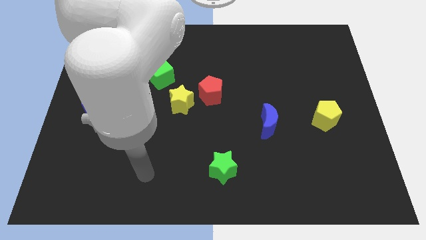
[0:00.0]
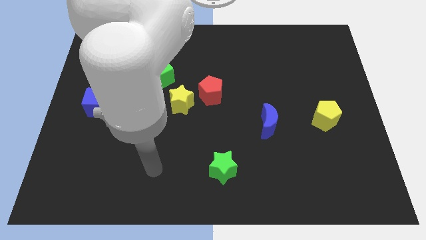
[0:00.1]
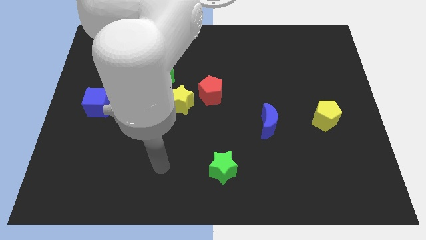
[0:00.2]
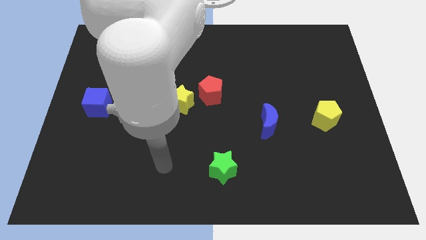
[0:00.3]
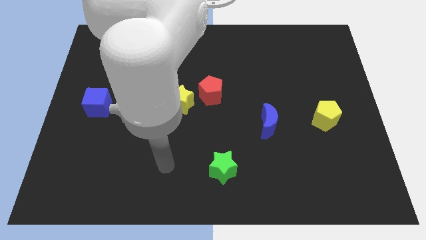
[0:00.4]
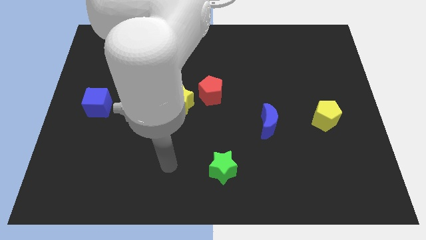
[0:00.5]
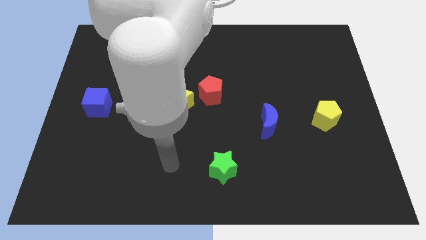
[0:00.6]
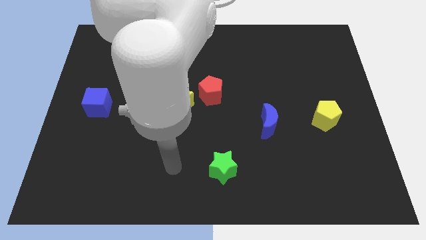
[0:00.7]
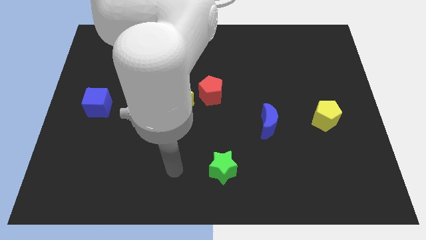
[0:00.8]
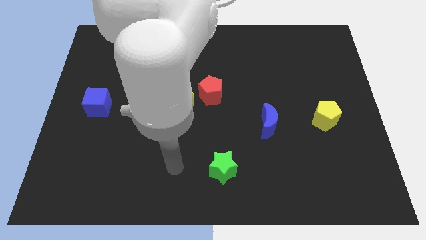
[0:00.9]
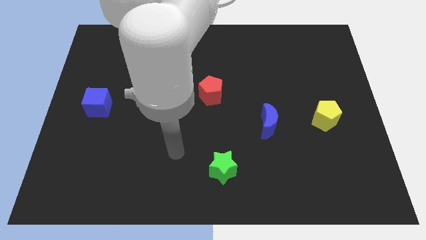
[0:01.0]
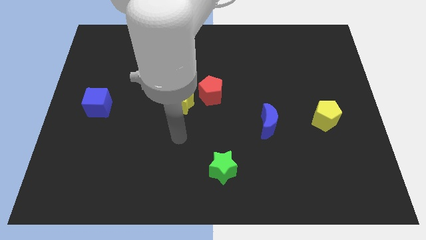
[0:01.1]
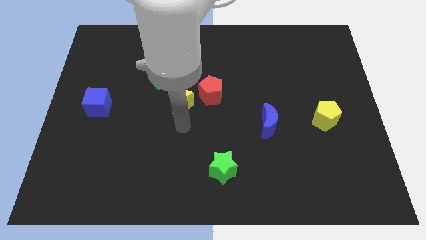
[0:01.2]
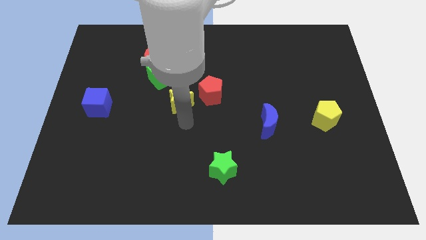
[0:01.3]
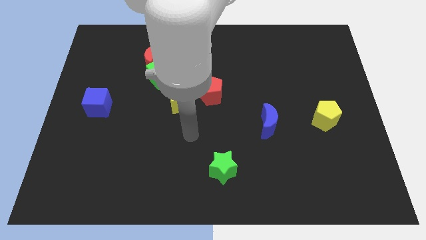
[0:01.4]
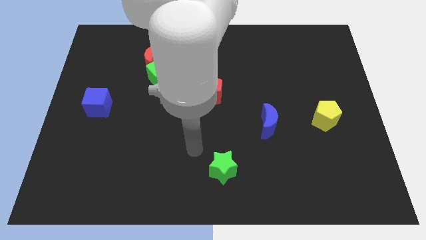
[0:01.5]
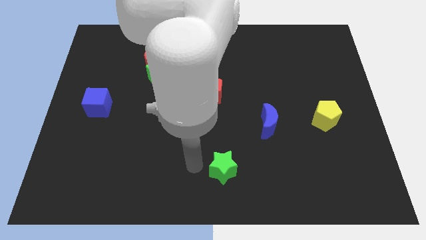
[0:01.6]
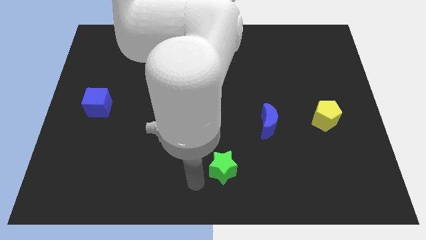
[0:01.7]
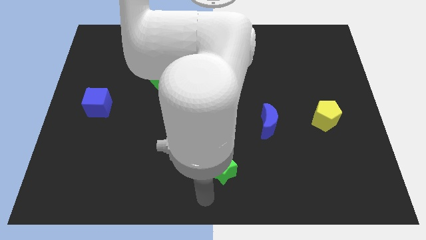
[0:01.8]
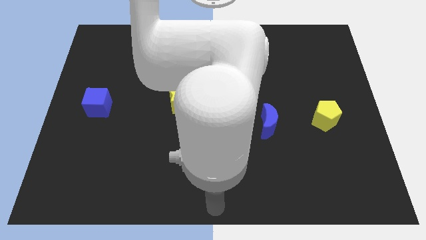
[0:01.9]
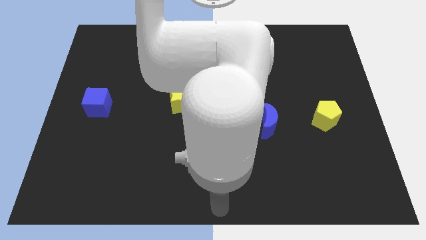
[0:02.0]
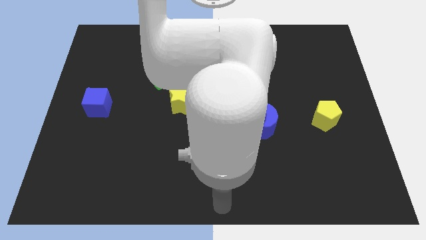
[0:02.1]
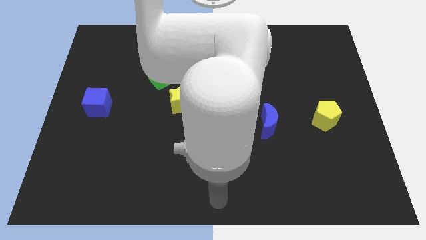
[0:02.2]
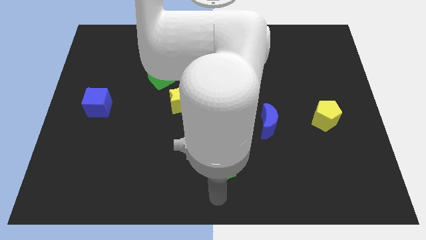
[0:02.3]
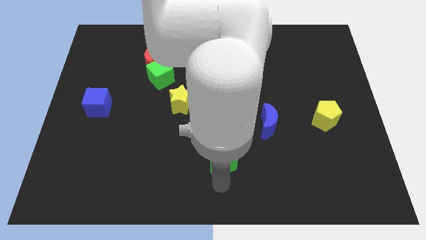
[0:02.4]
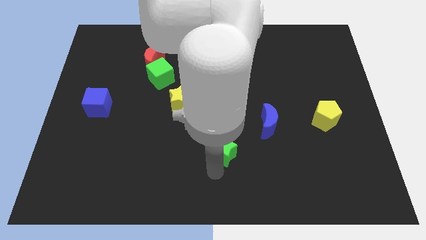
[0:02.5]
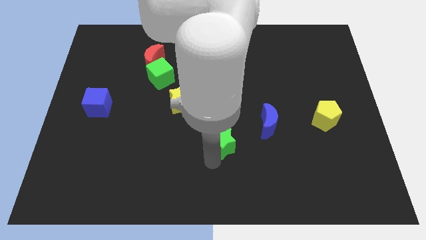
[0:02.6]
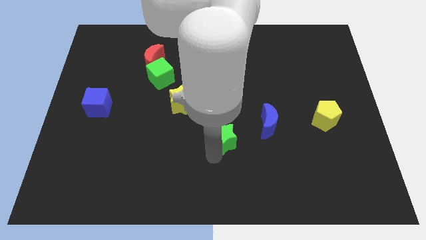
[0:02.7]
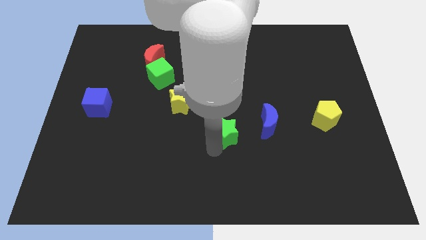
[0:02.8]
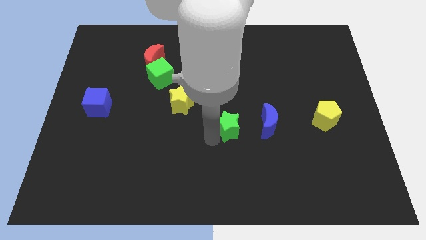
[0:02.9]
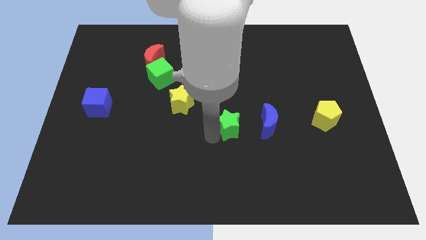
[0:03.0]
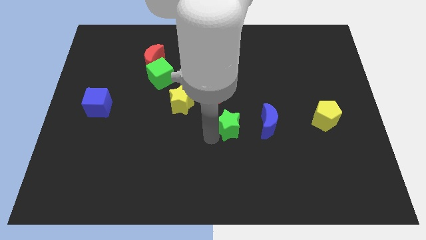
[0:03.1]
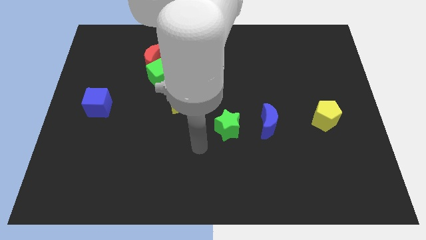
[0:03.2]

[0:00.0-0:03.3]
place green star parallel left to blue moon

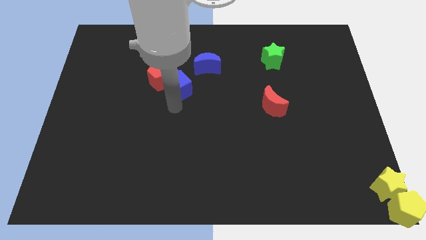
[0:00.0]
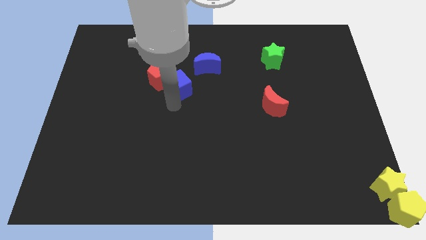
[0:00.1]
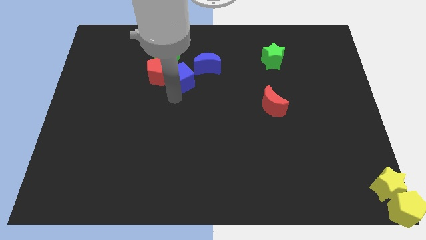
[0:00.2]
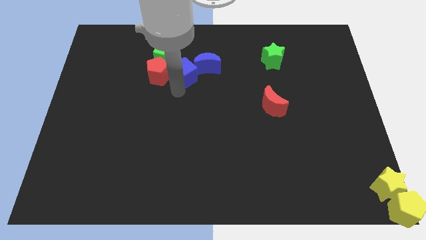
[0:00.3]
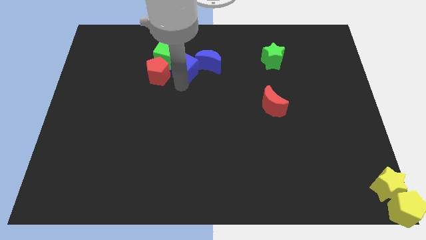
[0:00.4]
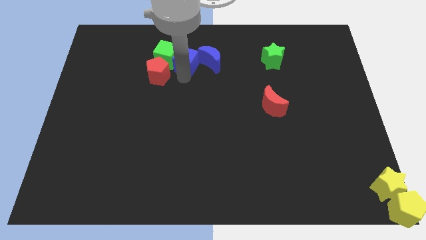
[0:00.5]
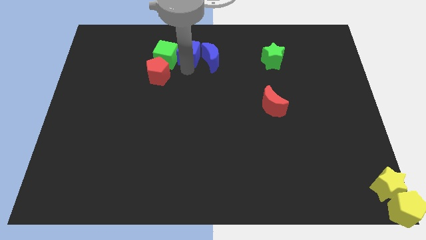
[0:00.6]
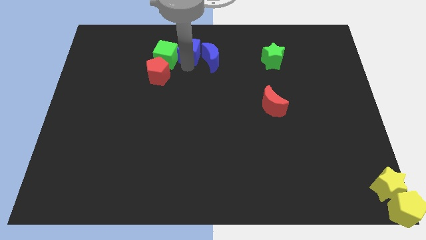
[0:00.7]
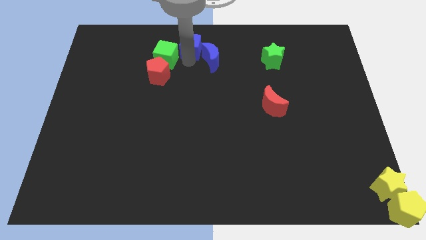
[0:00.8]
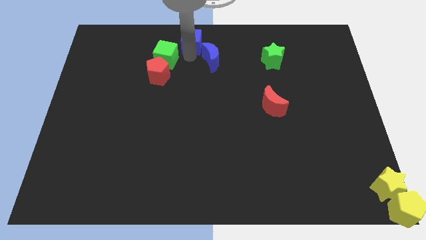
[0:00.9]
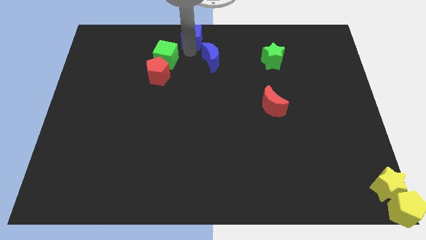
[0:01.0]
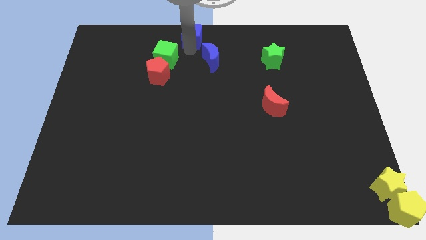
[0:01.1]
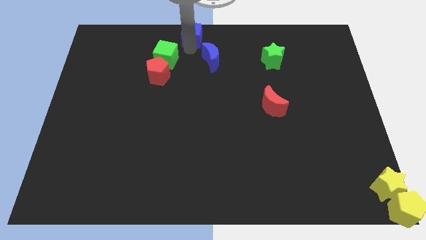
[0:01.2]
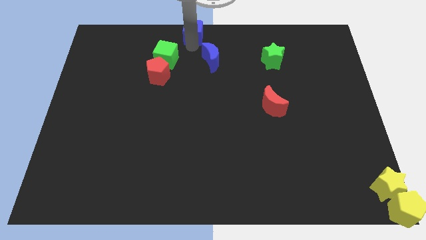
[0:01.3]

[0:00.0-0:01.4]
push the blue cube towards the top center of the board while separating the red pentagon and blue crescent

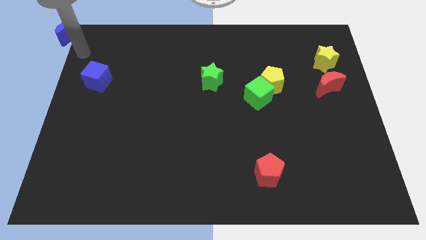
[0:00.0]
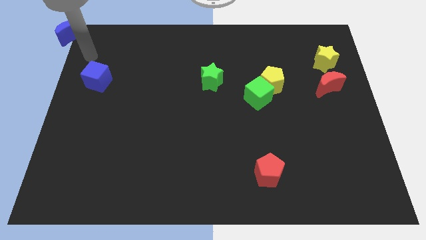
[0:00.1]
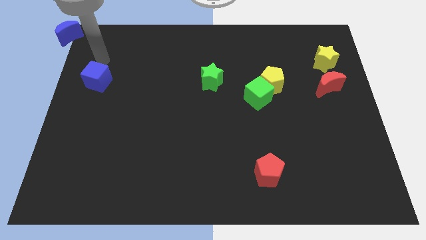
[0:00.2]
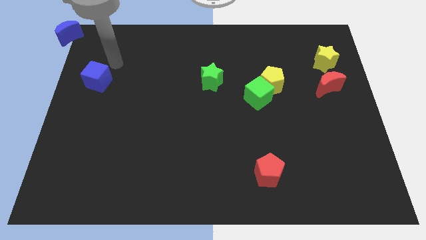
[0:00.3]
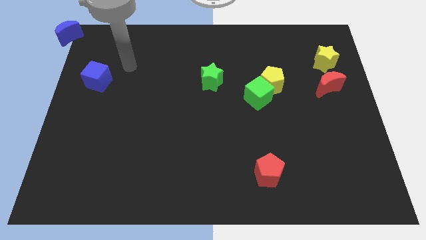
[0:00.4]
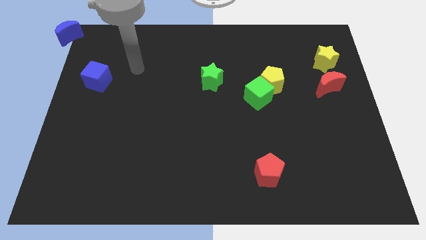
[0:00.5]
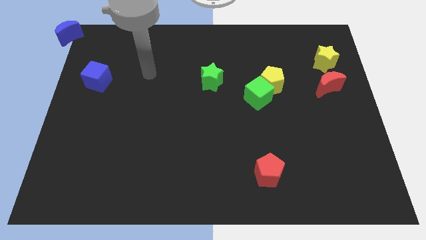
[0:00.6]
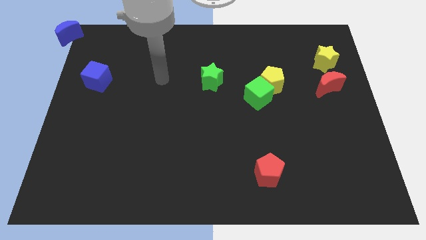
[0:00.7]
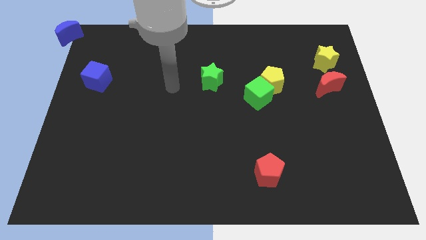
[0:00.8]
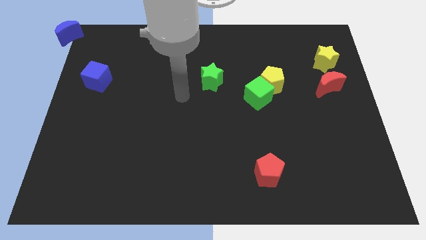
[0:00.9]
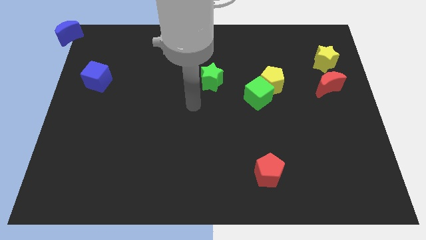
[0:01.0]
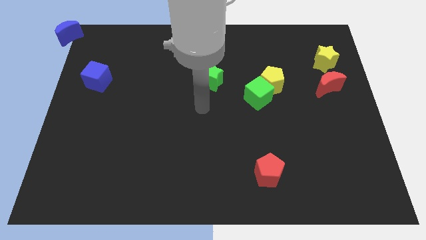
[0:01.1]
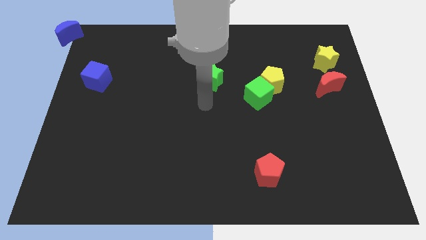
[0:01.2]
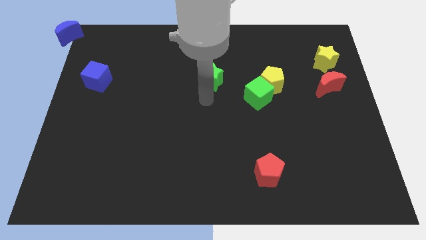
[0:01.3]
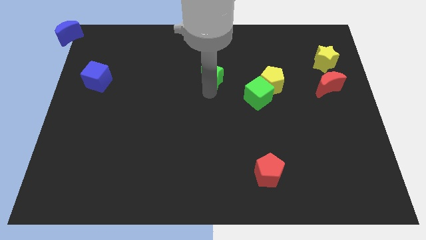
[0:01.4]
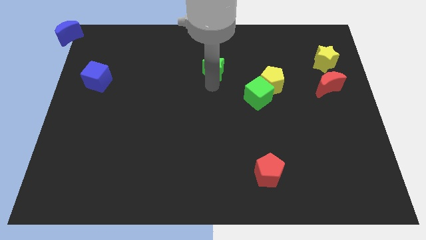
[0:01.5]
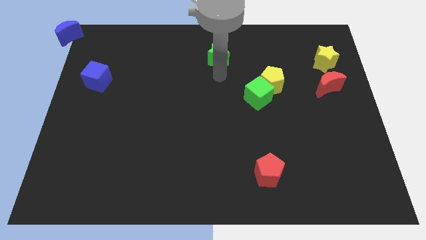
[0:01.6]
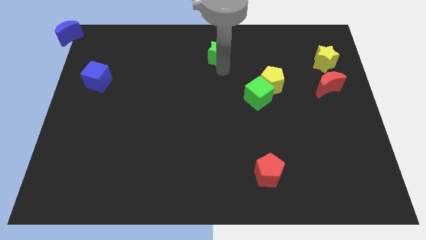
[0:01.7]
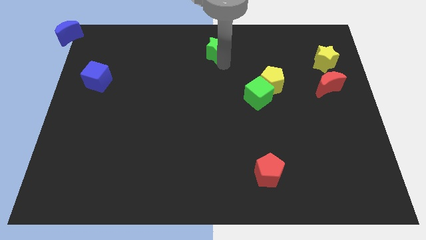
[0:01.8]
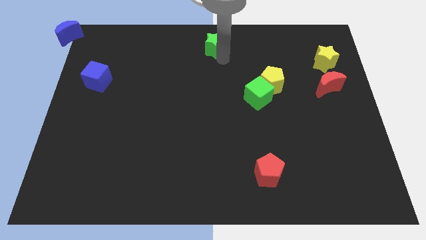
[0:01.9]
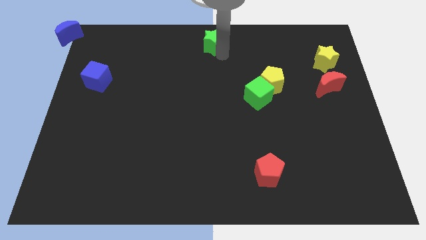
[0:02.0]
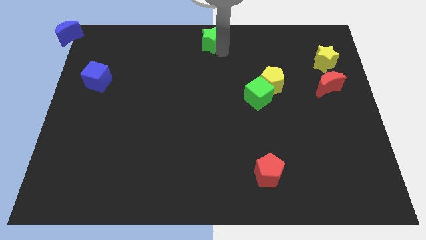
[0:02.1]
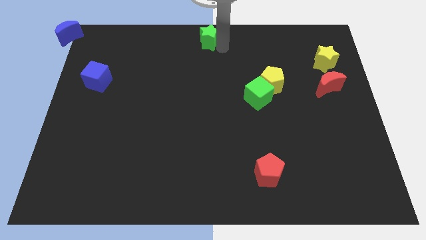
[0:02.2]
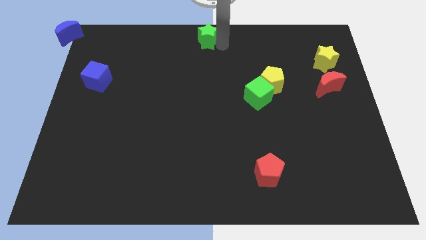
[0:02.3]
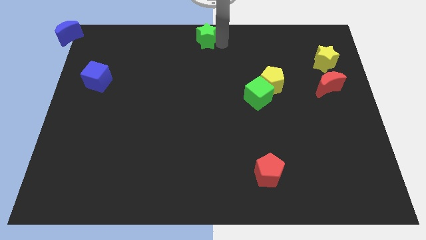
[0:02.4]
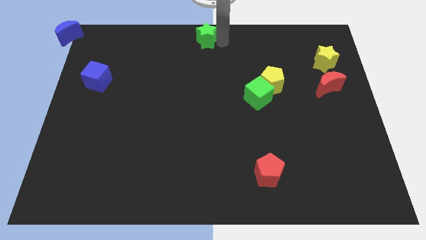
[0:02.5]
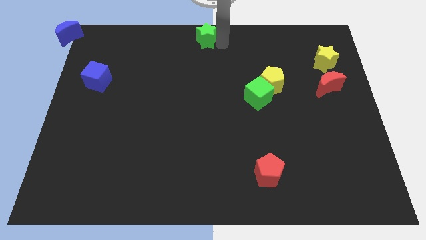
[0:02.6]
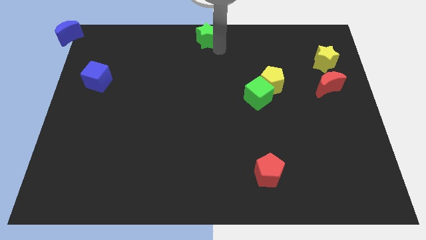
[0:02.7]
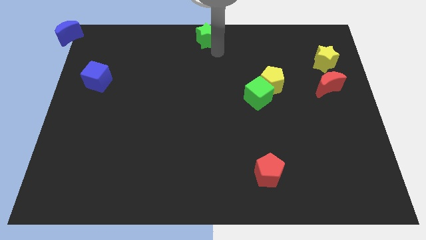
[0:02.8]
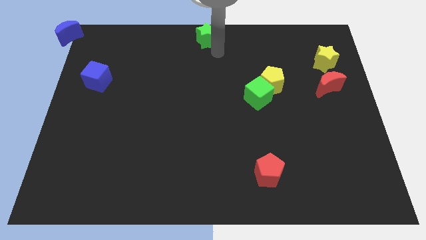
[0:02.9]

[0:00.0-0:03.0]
move the green star to the top center of the board

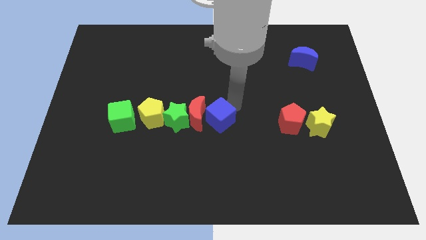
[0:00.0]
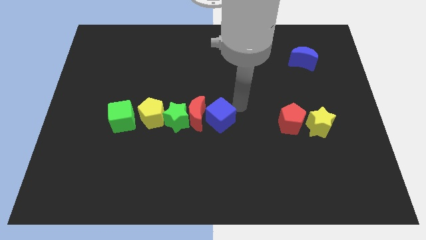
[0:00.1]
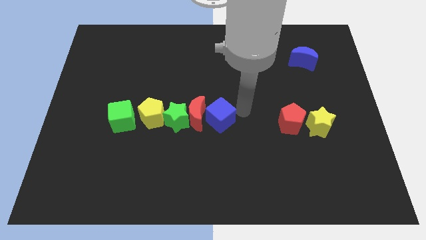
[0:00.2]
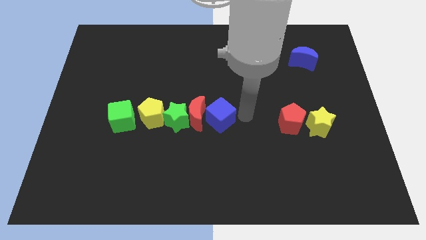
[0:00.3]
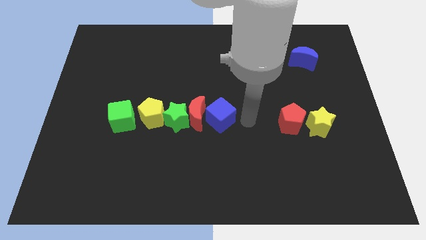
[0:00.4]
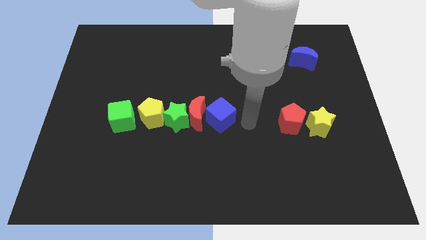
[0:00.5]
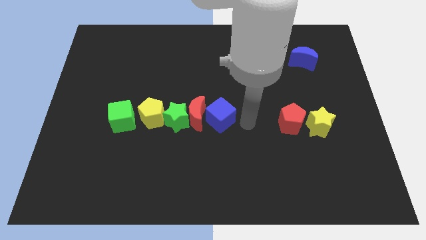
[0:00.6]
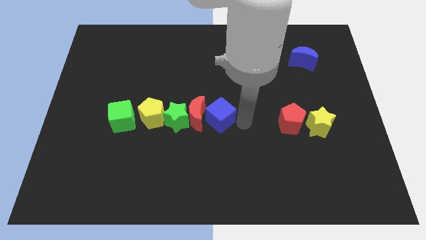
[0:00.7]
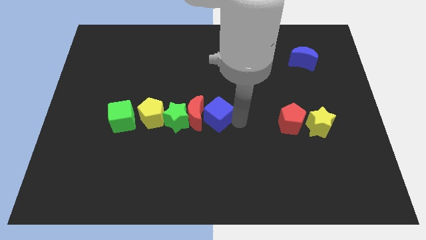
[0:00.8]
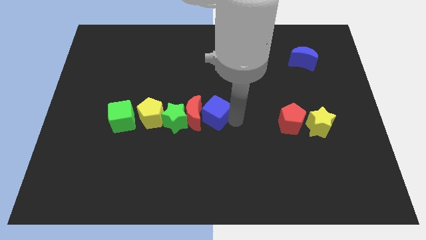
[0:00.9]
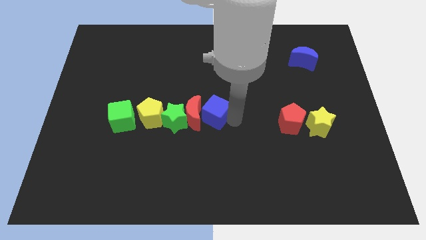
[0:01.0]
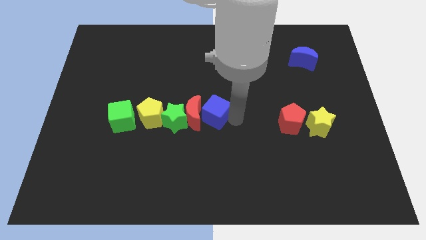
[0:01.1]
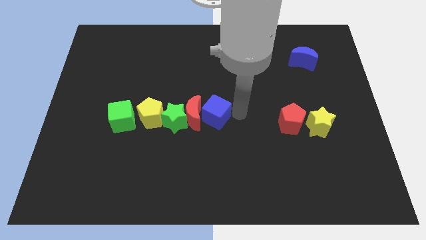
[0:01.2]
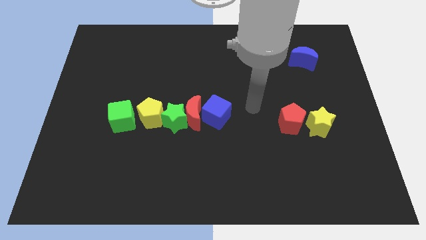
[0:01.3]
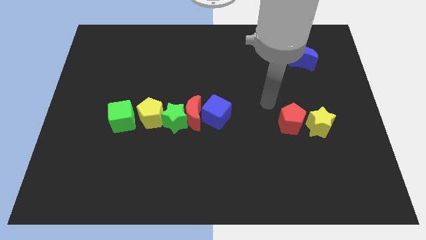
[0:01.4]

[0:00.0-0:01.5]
push the blue cube into the red crescent
